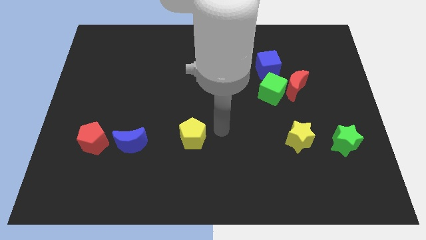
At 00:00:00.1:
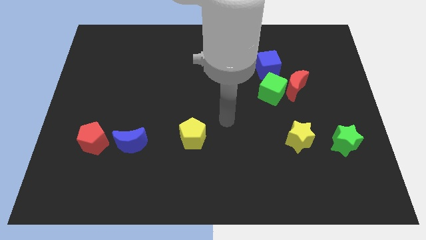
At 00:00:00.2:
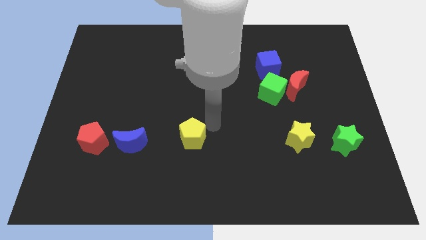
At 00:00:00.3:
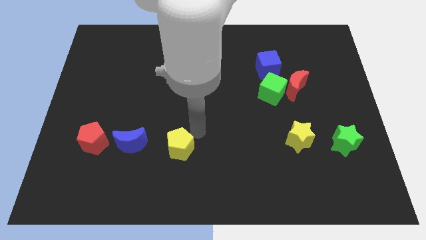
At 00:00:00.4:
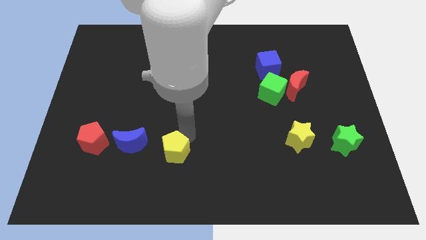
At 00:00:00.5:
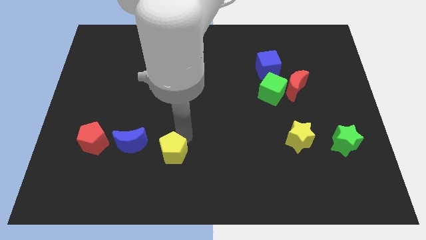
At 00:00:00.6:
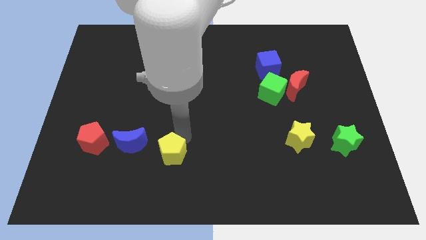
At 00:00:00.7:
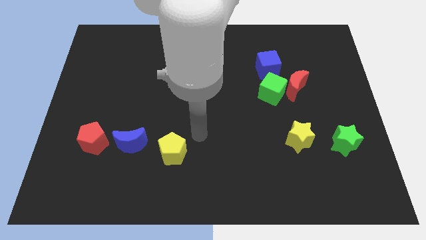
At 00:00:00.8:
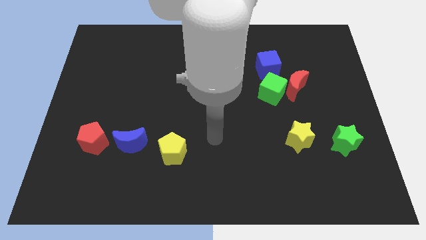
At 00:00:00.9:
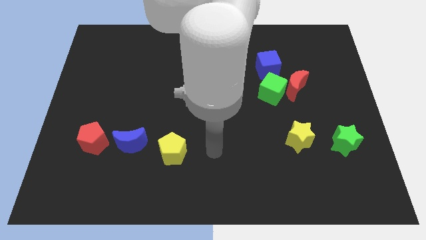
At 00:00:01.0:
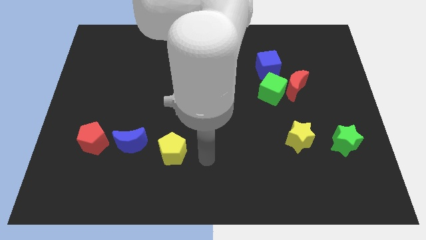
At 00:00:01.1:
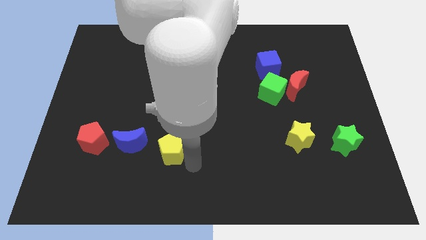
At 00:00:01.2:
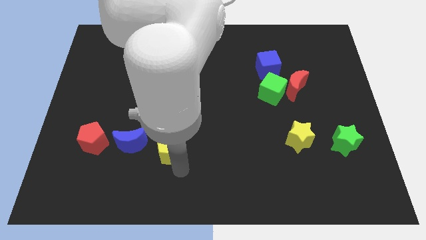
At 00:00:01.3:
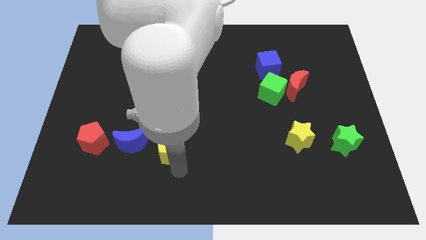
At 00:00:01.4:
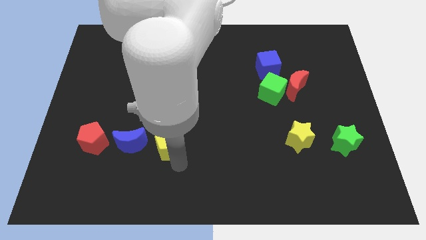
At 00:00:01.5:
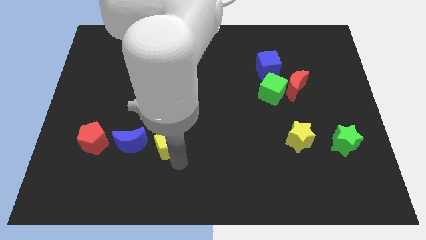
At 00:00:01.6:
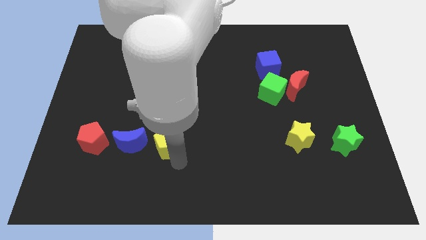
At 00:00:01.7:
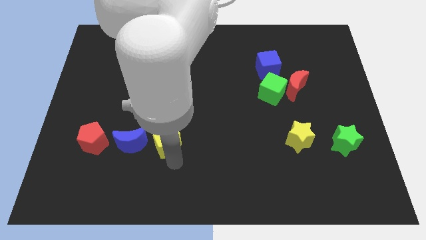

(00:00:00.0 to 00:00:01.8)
put the yellow pentagon on the right side of the blue crescent

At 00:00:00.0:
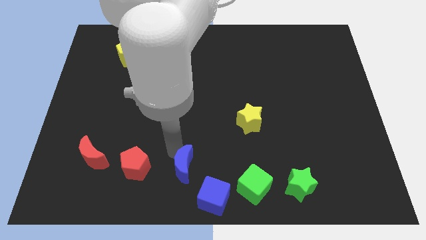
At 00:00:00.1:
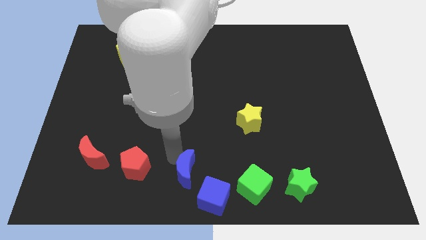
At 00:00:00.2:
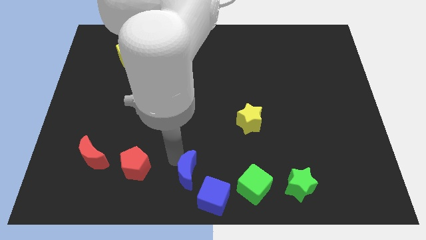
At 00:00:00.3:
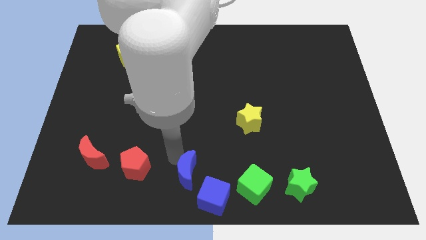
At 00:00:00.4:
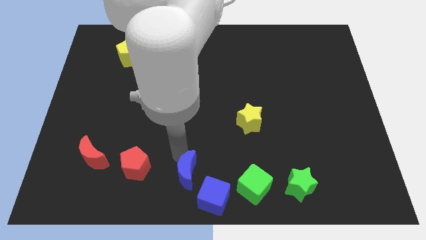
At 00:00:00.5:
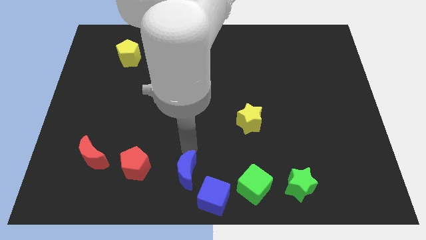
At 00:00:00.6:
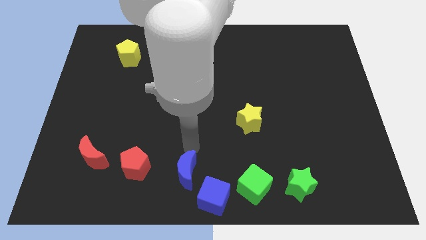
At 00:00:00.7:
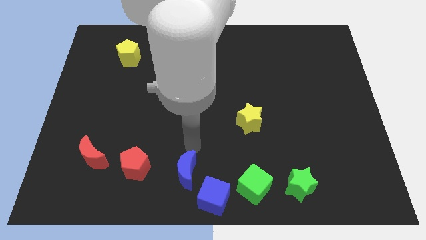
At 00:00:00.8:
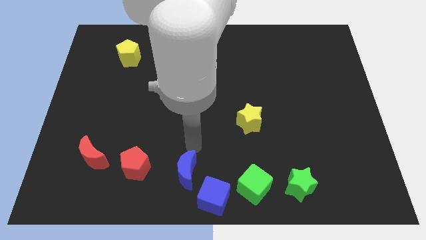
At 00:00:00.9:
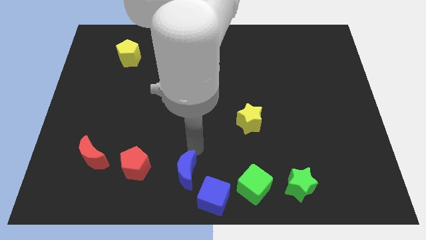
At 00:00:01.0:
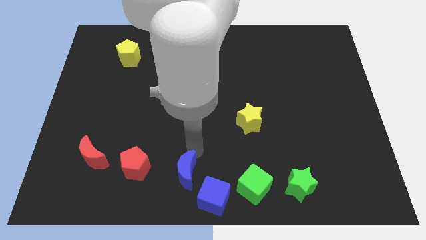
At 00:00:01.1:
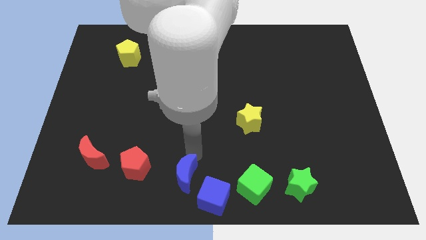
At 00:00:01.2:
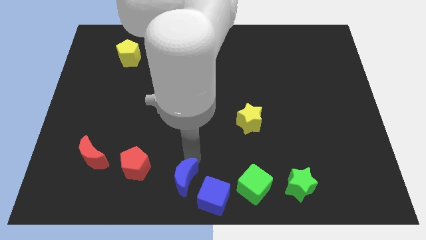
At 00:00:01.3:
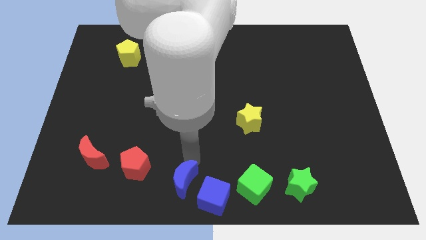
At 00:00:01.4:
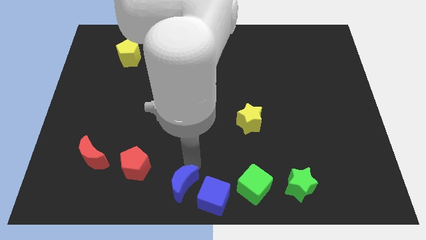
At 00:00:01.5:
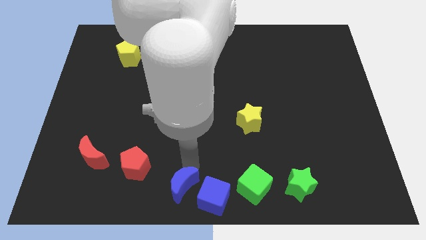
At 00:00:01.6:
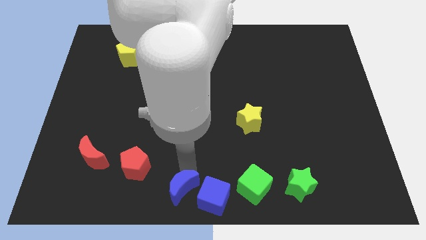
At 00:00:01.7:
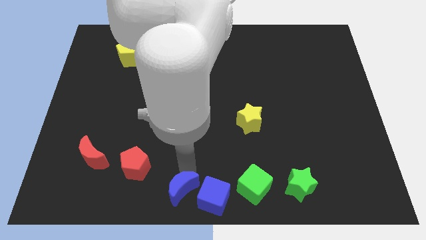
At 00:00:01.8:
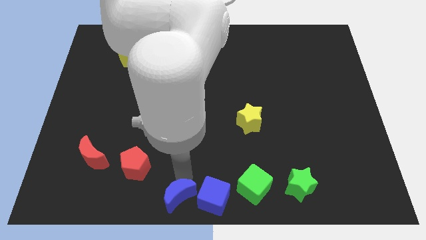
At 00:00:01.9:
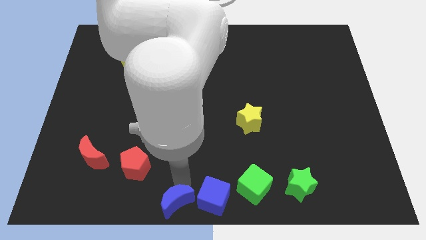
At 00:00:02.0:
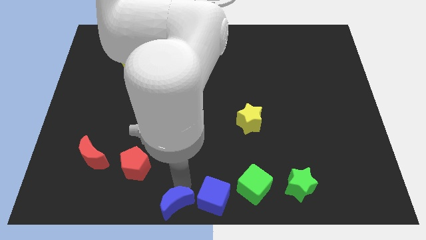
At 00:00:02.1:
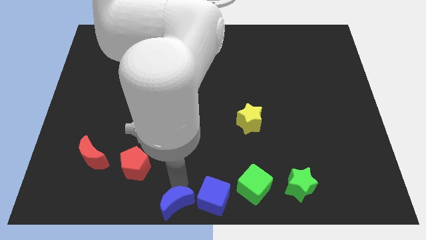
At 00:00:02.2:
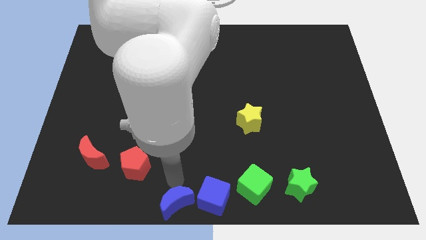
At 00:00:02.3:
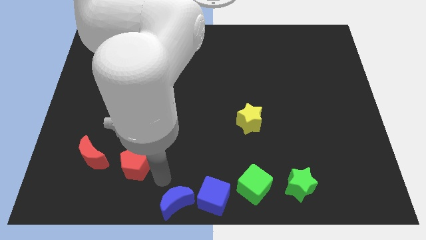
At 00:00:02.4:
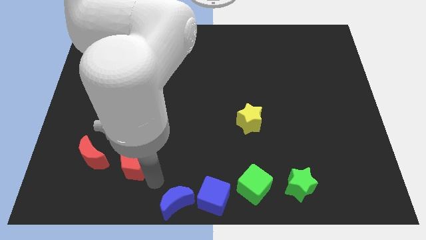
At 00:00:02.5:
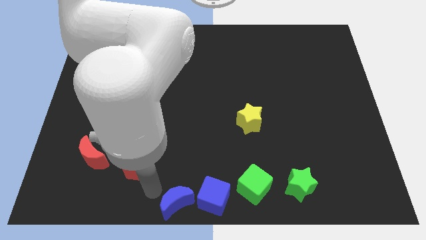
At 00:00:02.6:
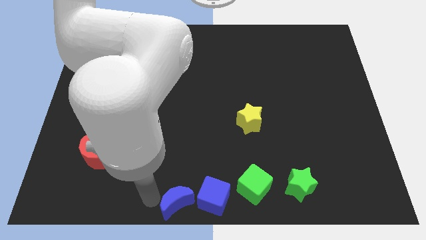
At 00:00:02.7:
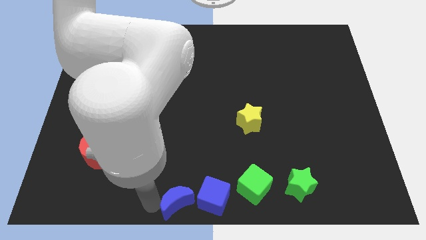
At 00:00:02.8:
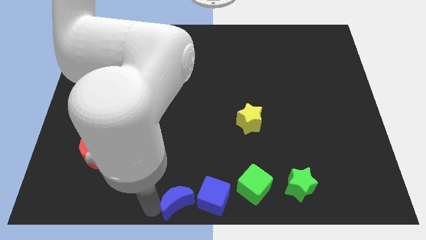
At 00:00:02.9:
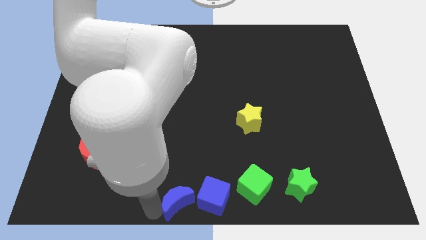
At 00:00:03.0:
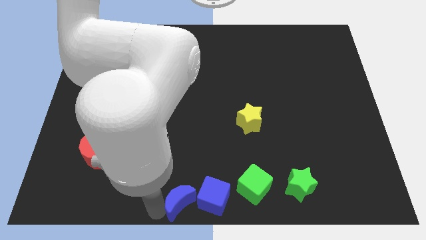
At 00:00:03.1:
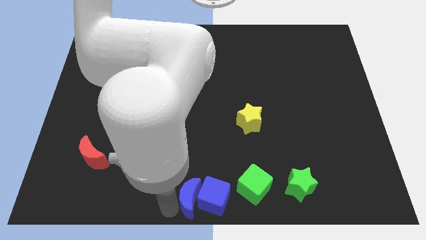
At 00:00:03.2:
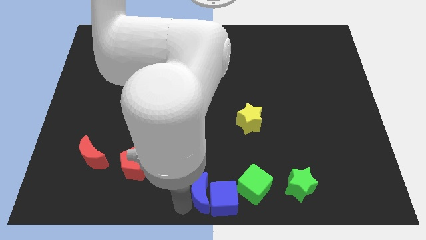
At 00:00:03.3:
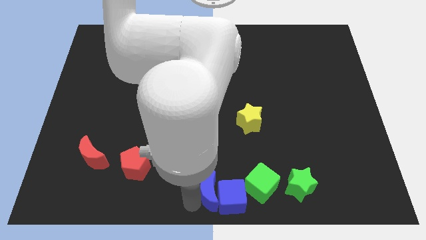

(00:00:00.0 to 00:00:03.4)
push the blue moon into the blue cube

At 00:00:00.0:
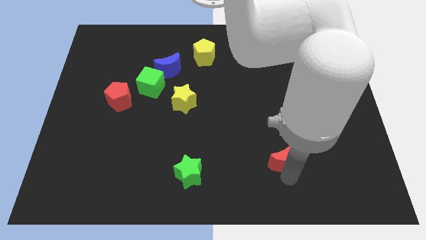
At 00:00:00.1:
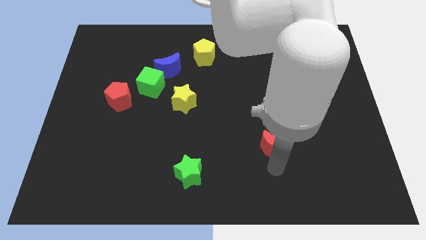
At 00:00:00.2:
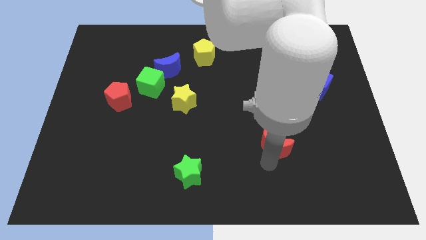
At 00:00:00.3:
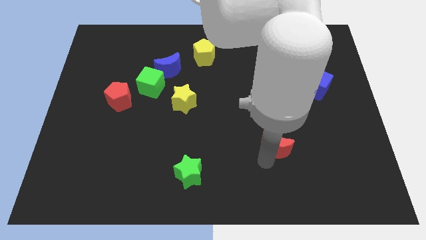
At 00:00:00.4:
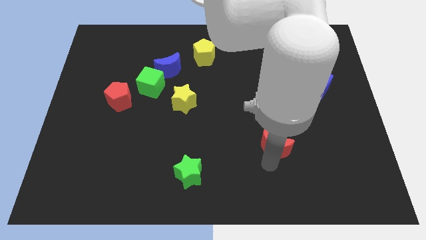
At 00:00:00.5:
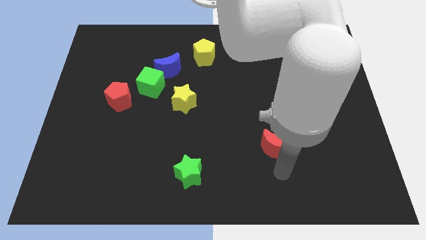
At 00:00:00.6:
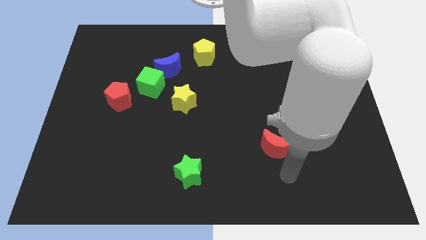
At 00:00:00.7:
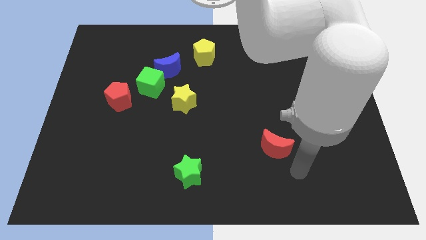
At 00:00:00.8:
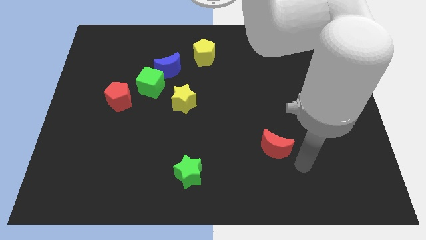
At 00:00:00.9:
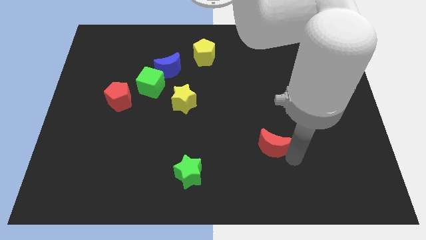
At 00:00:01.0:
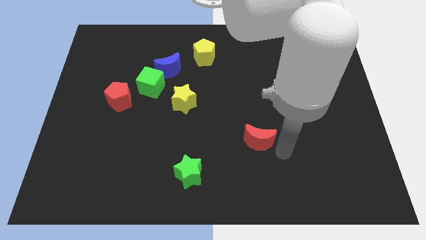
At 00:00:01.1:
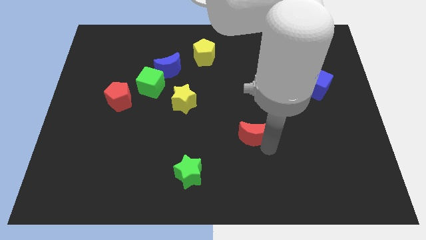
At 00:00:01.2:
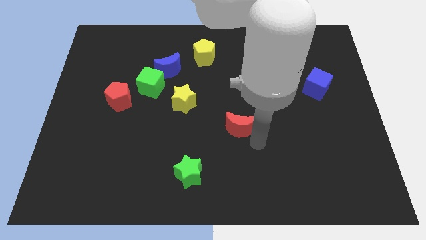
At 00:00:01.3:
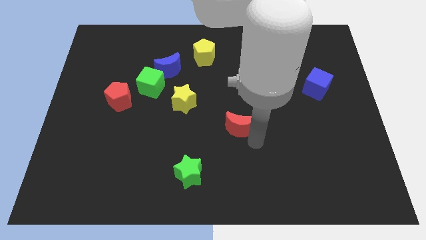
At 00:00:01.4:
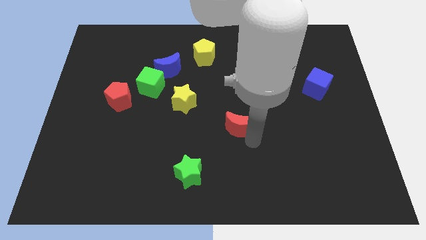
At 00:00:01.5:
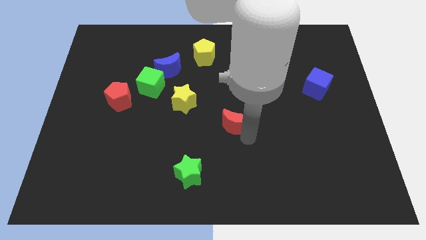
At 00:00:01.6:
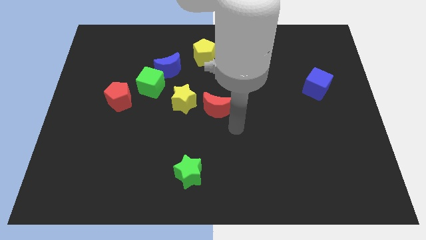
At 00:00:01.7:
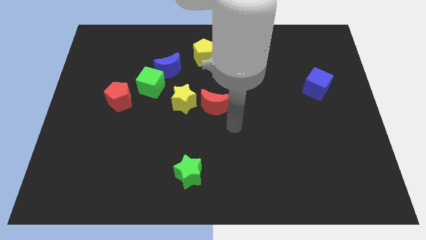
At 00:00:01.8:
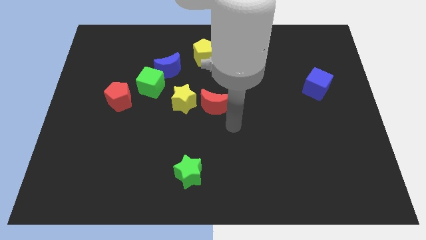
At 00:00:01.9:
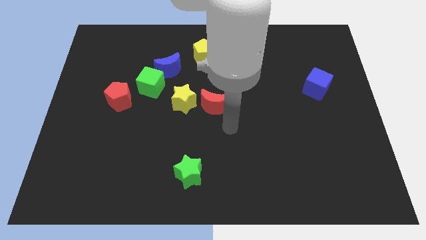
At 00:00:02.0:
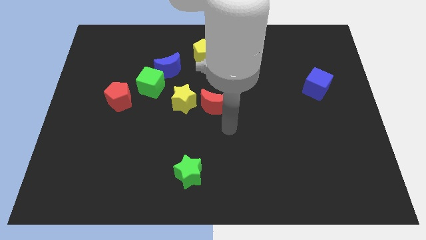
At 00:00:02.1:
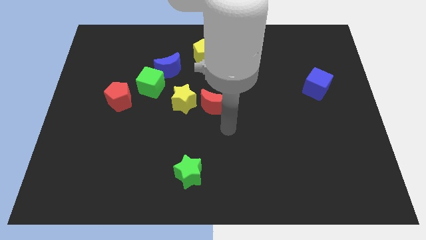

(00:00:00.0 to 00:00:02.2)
place the red crescent to the right of yellow star

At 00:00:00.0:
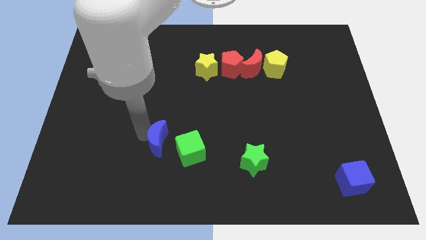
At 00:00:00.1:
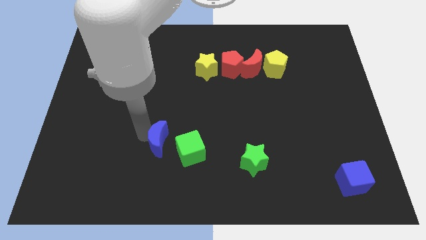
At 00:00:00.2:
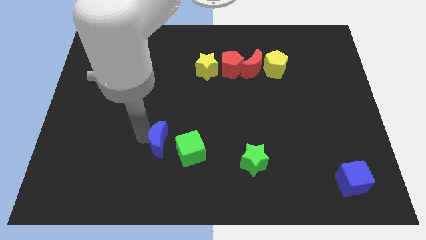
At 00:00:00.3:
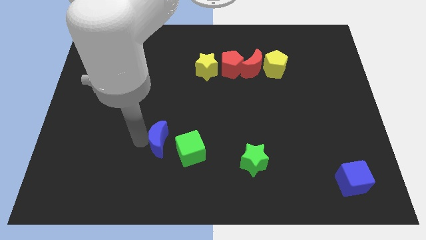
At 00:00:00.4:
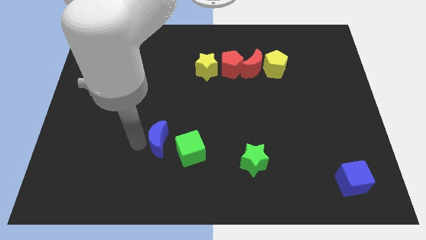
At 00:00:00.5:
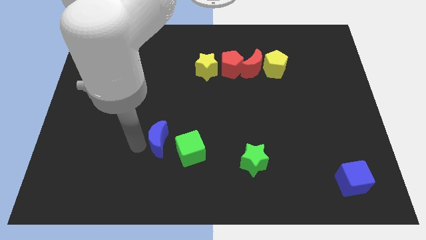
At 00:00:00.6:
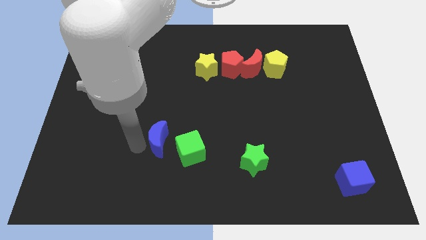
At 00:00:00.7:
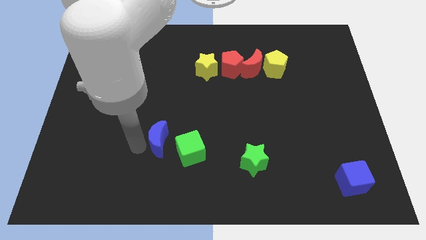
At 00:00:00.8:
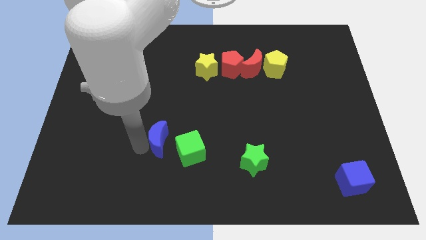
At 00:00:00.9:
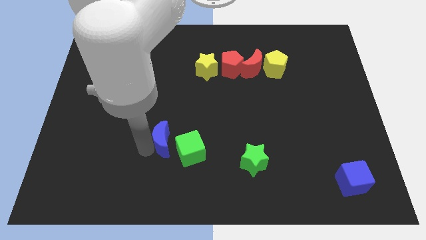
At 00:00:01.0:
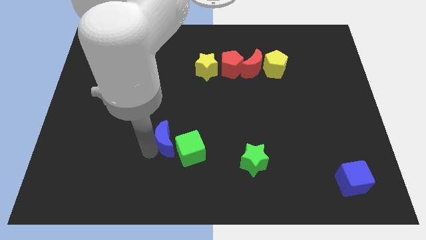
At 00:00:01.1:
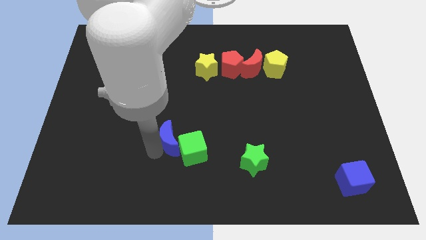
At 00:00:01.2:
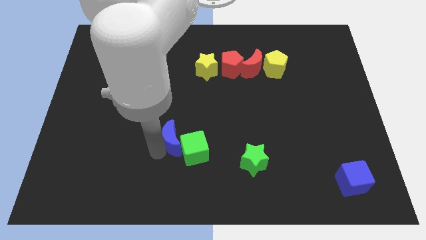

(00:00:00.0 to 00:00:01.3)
push blue moon into green cube
